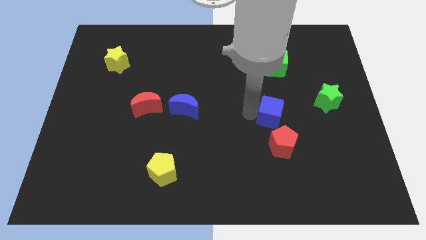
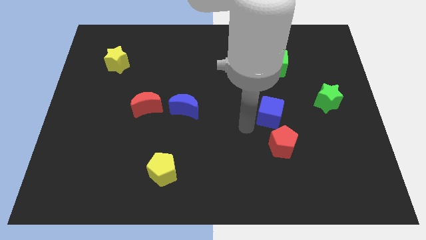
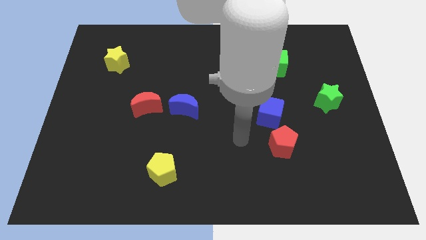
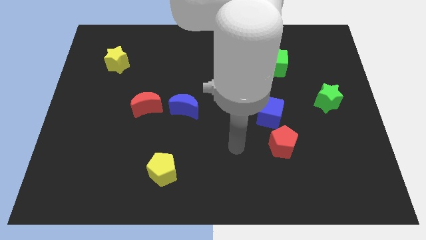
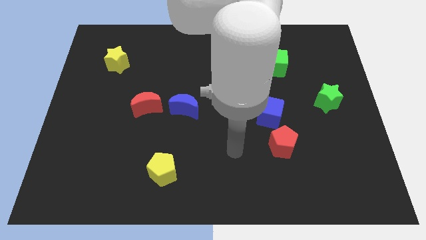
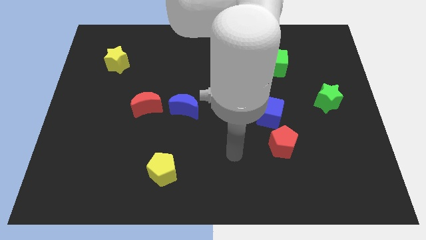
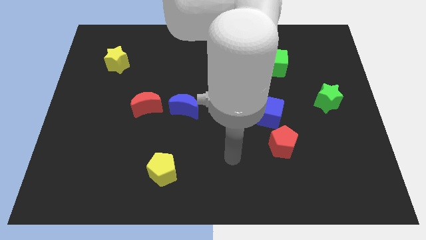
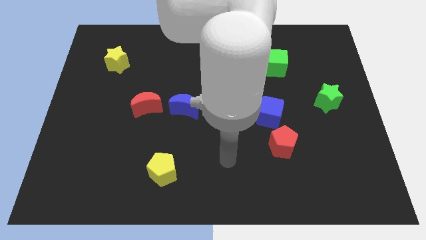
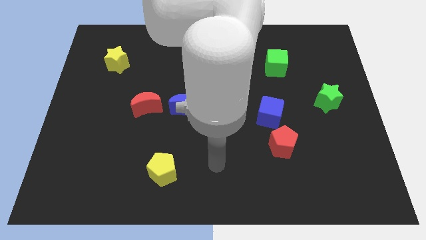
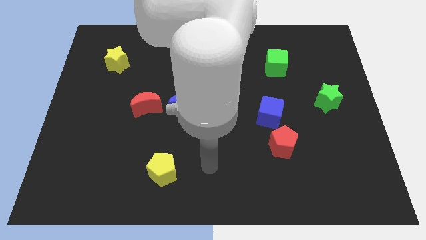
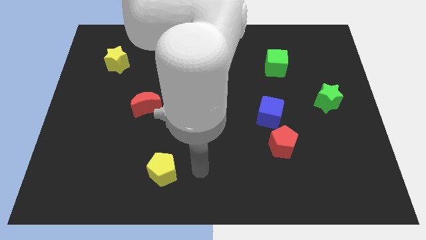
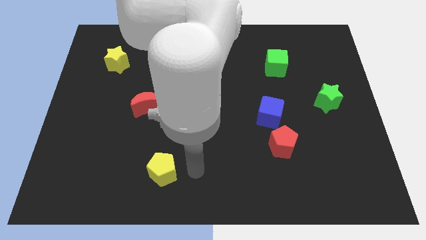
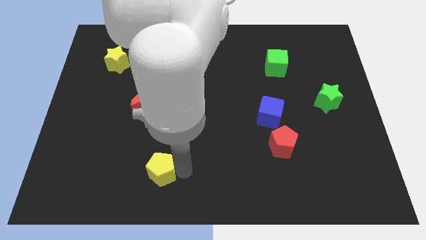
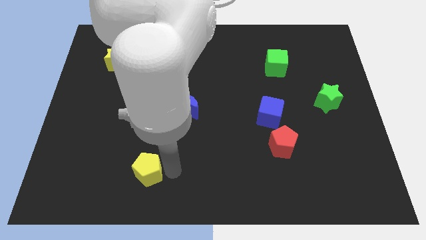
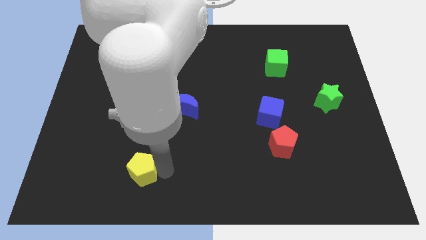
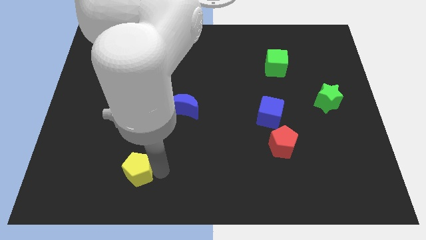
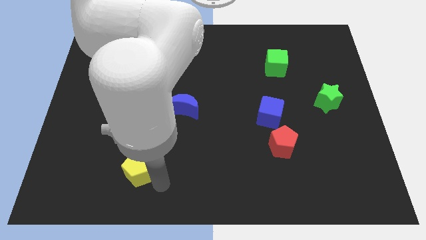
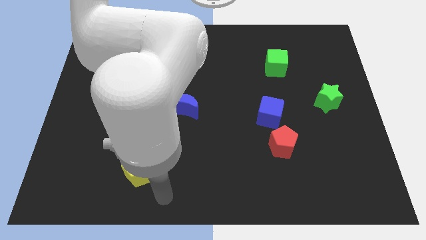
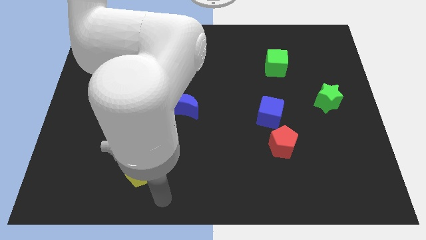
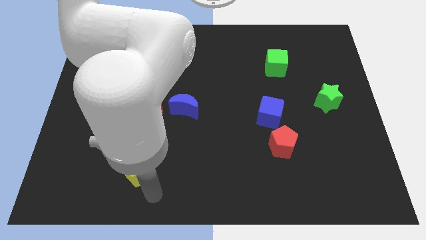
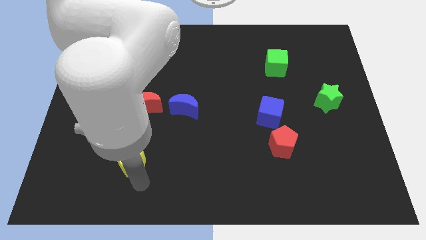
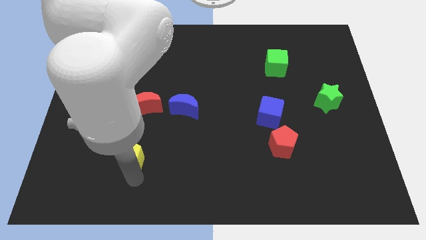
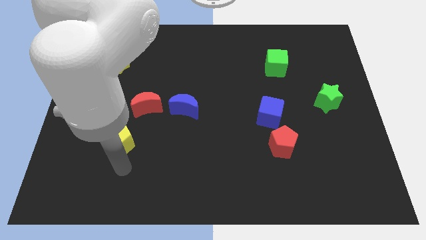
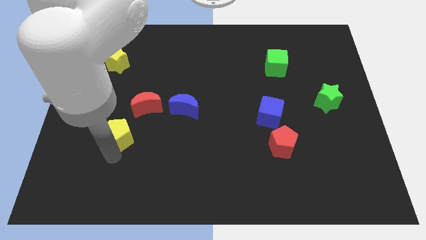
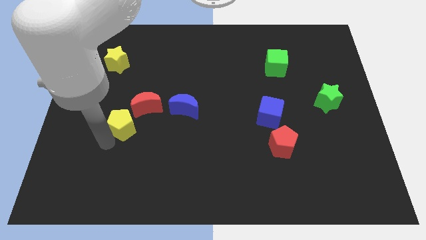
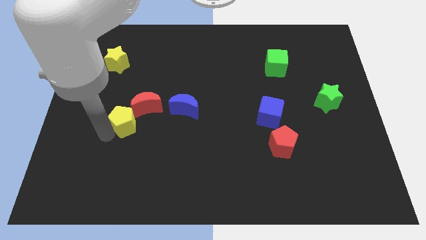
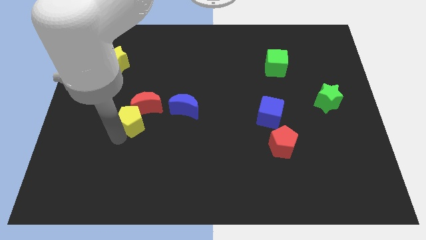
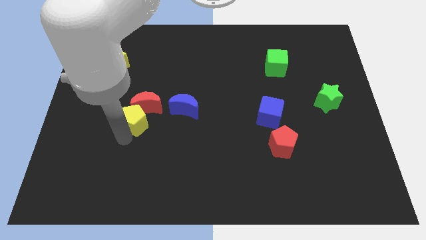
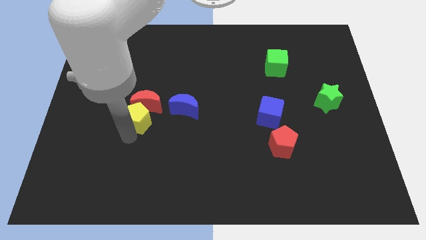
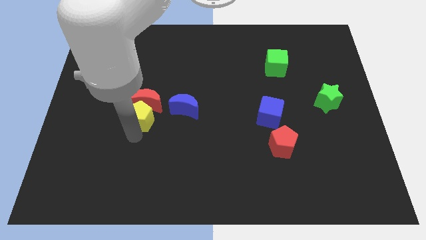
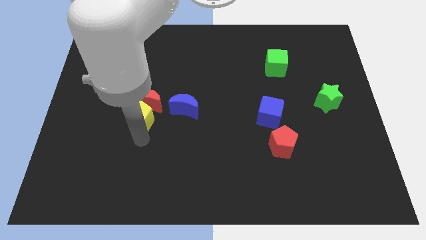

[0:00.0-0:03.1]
push the yellow pentagon into the bottom of the red moon

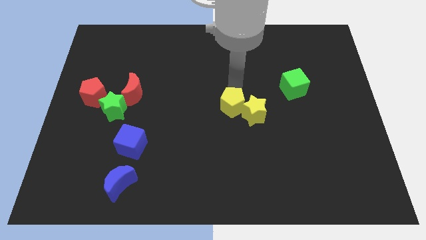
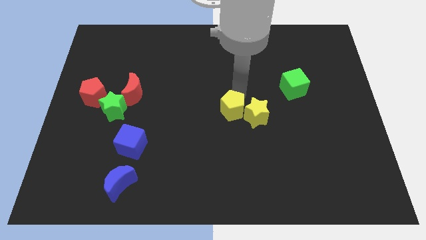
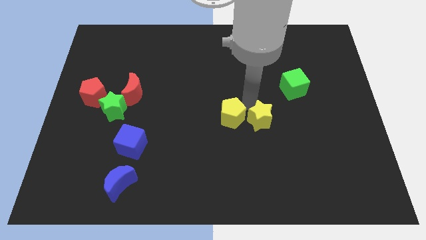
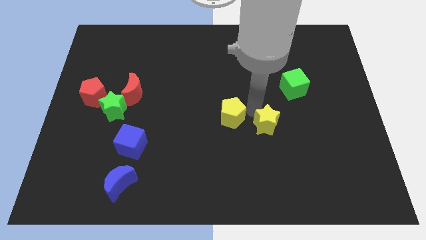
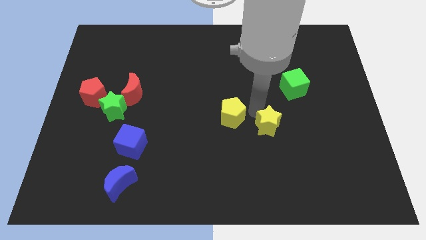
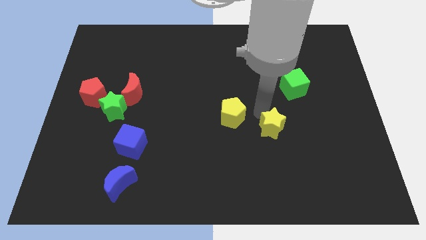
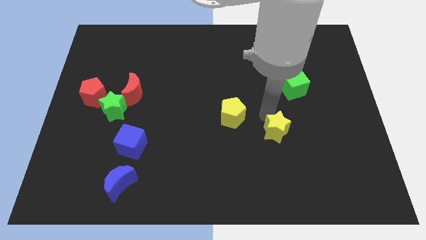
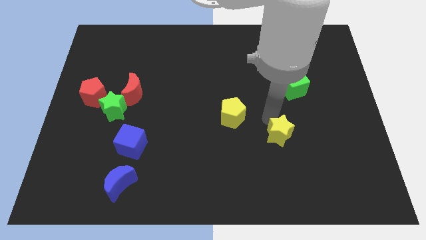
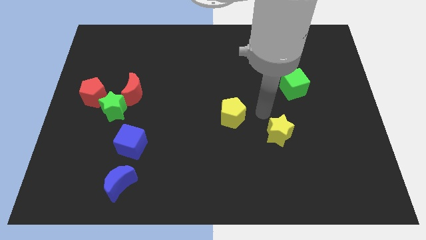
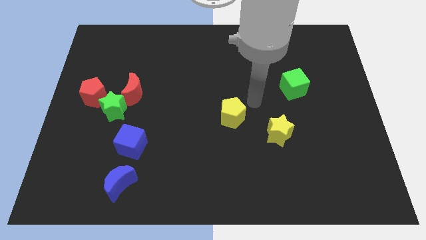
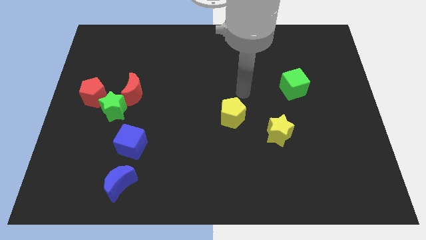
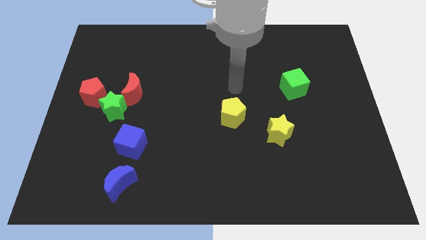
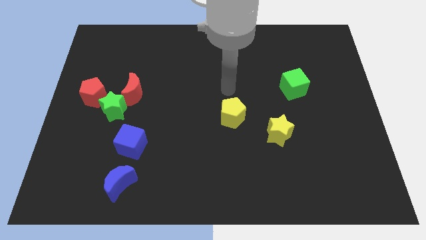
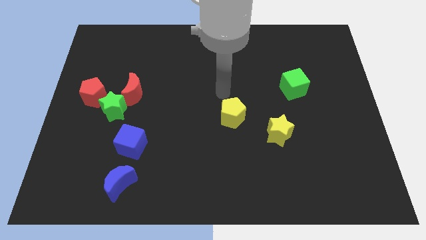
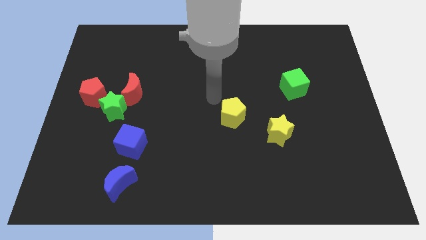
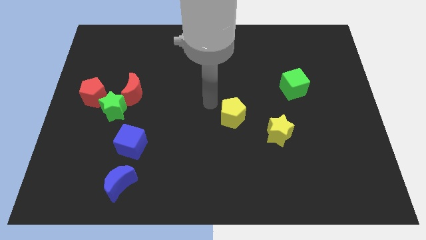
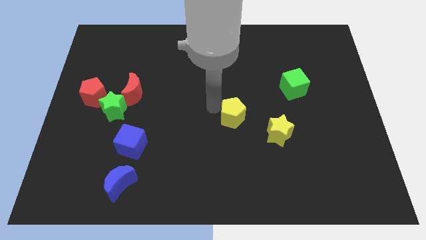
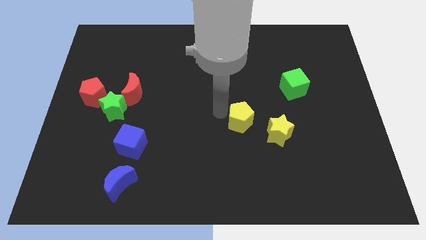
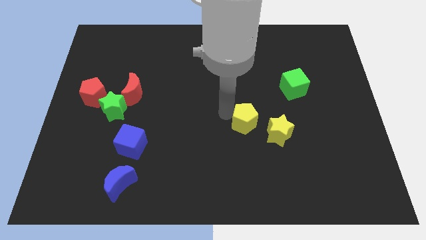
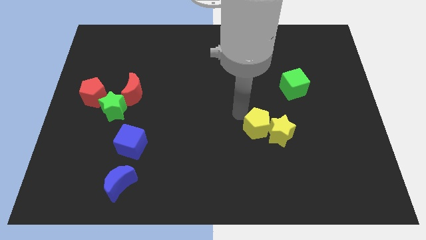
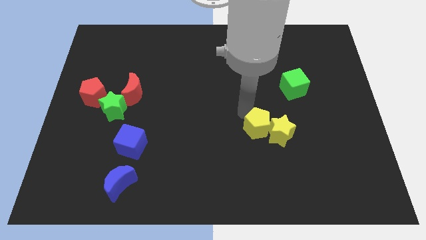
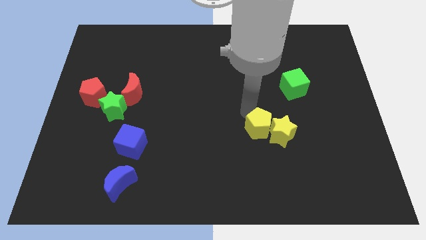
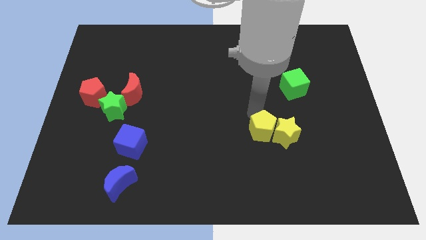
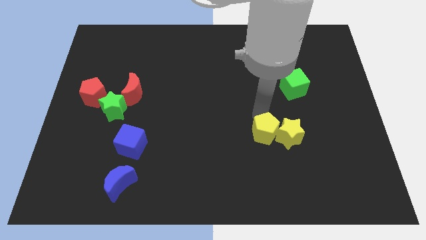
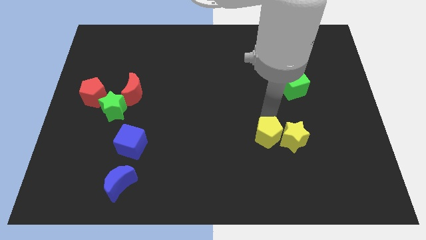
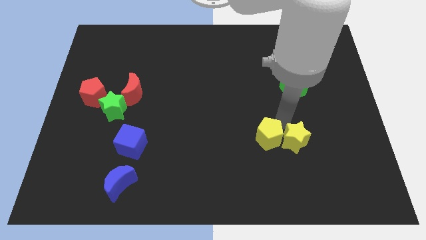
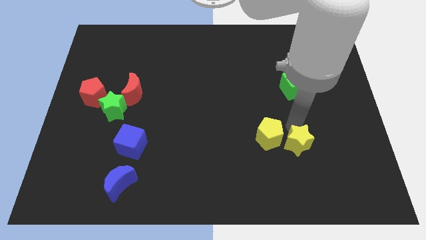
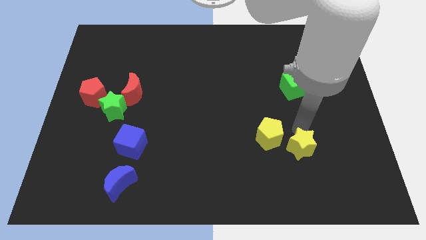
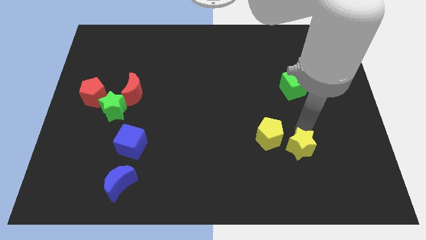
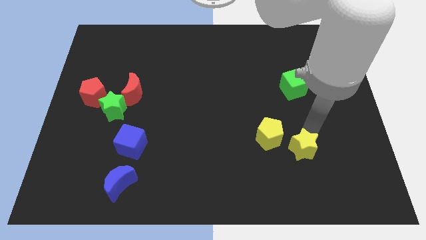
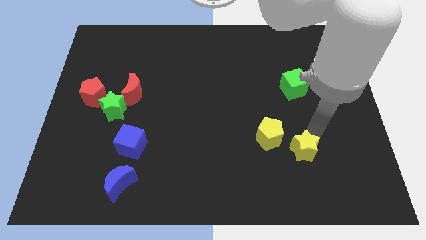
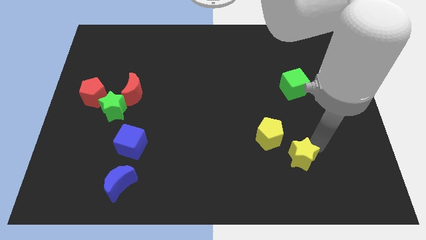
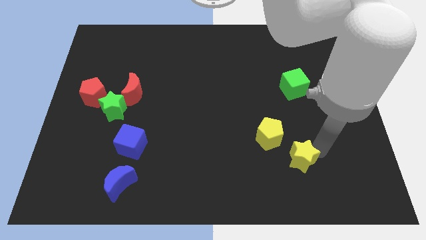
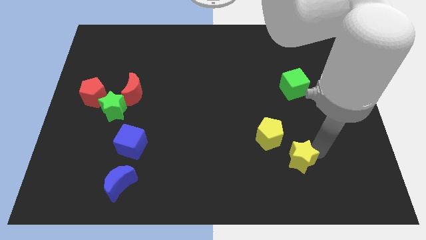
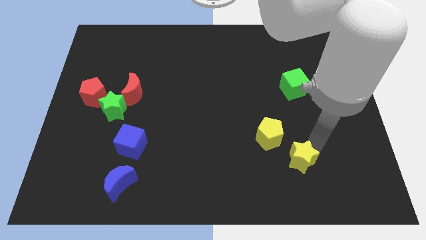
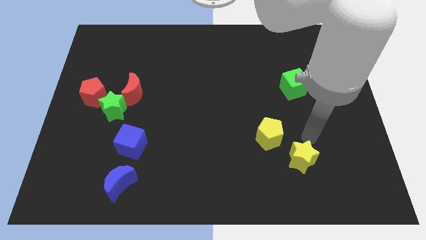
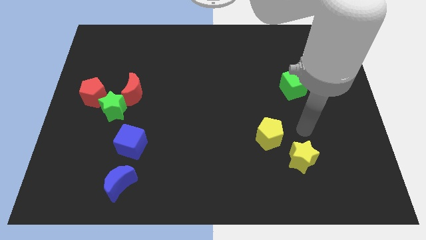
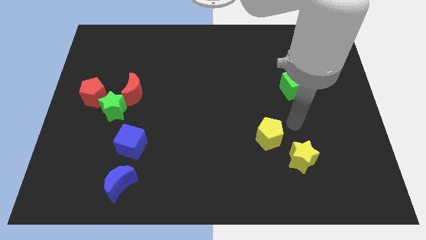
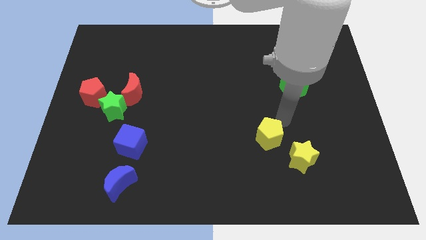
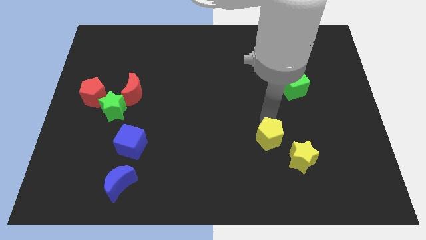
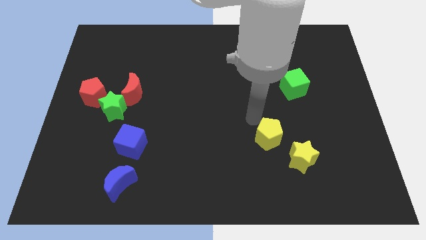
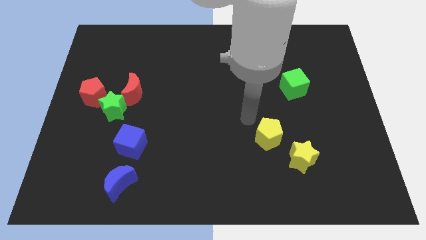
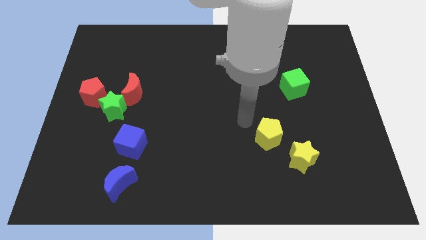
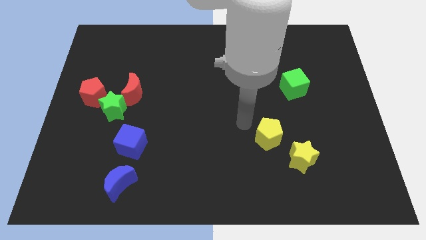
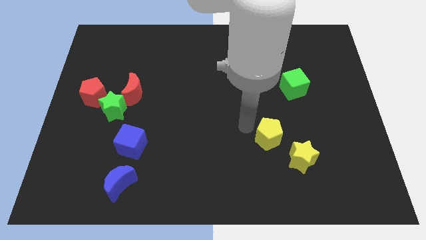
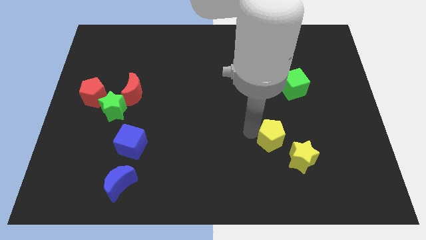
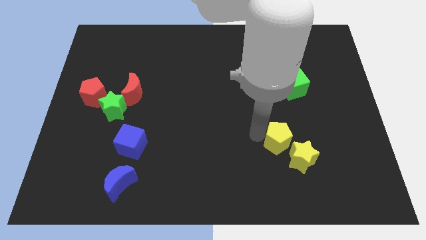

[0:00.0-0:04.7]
move the yellow pentagon bottom left diagonally to the green cube

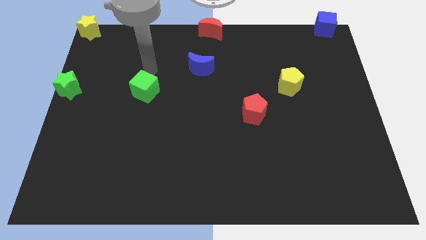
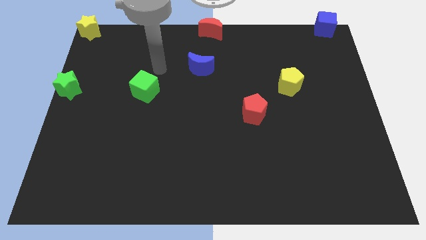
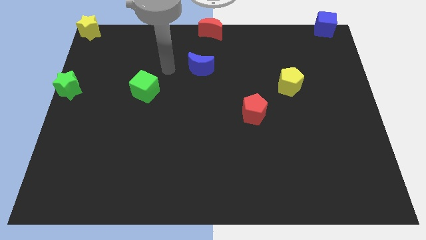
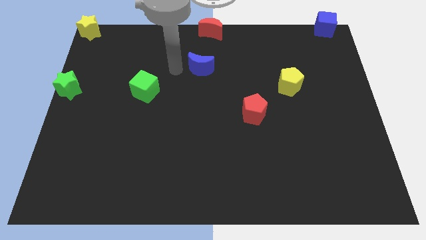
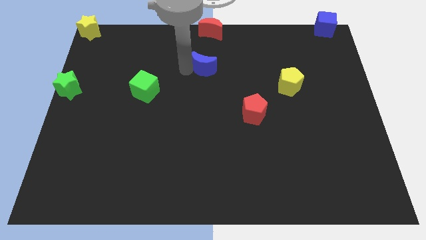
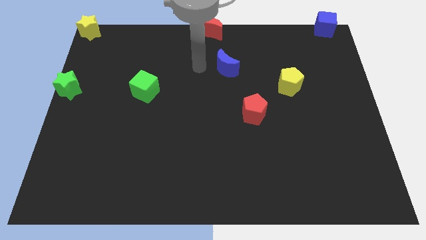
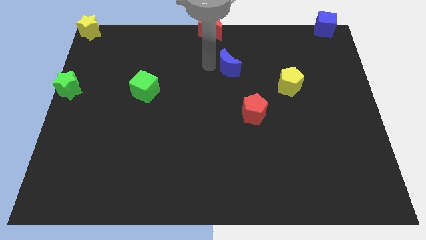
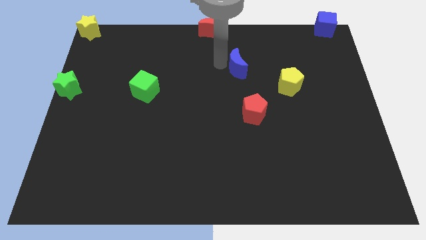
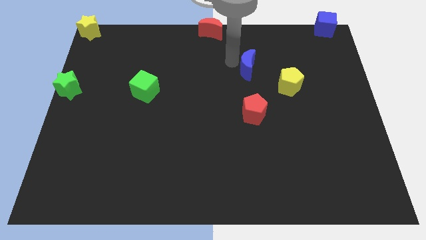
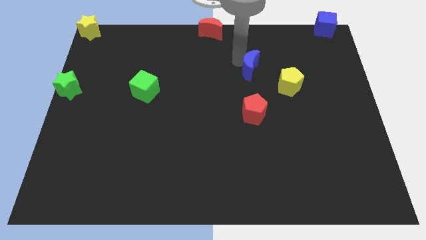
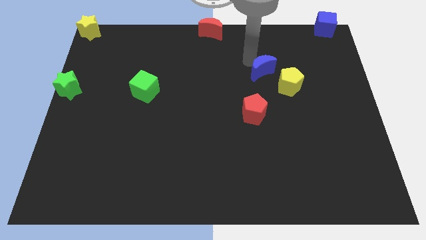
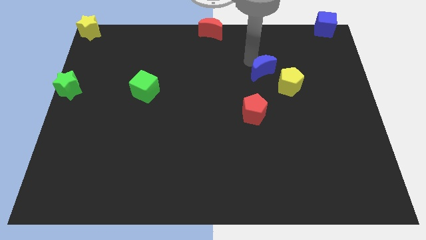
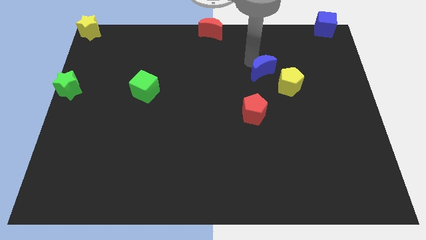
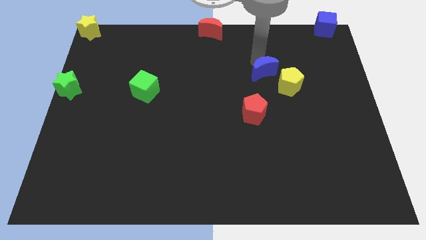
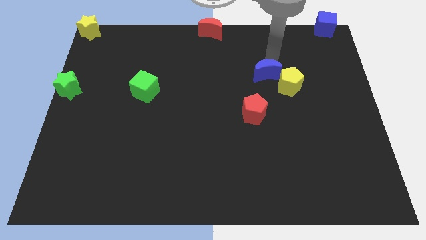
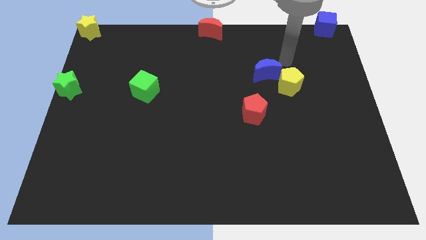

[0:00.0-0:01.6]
push the blue moon close to the yellow pentagon
